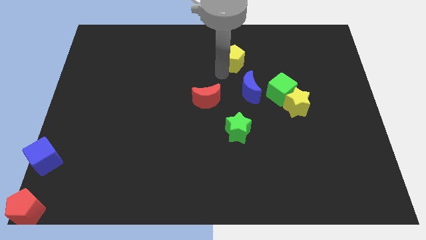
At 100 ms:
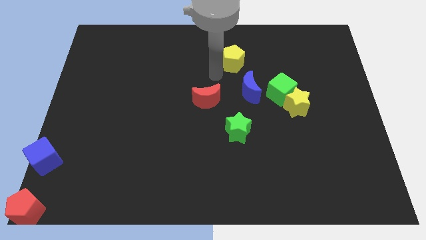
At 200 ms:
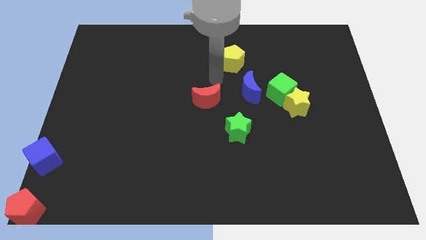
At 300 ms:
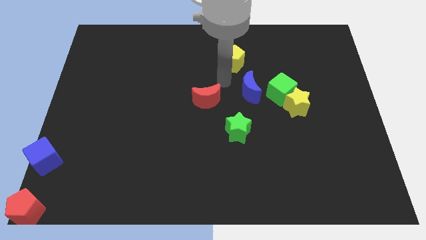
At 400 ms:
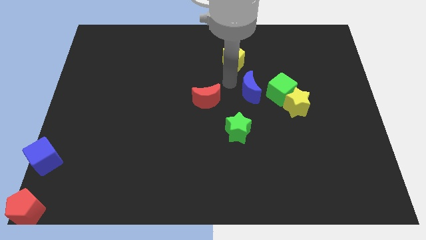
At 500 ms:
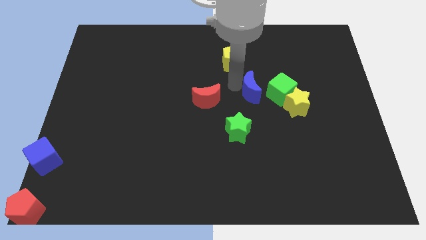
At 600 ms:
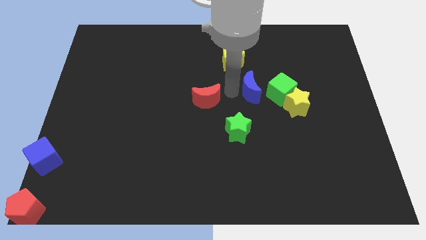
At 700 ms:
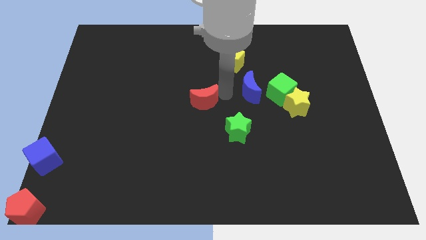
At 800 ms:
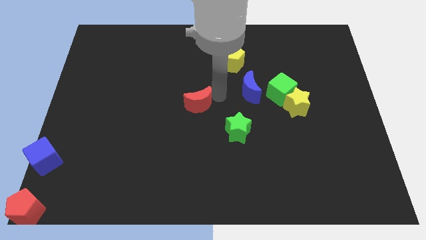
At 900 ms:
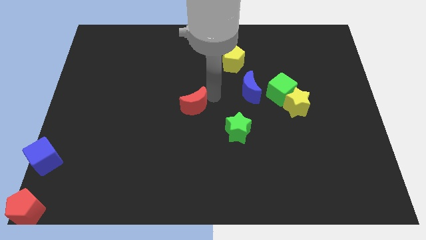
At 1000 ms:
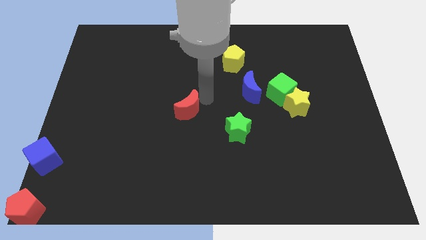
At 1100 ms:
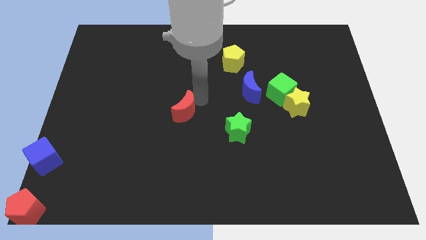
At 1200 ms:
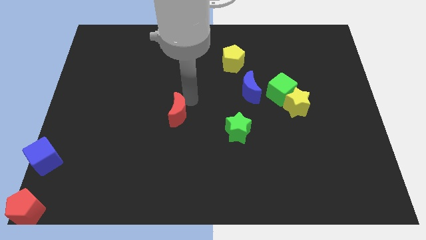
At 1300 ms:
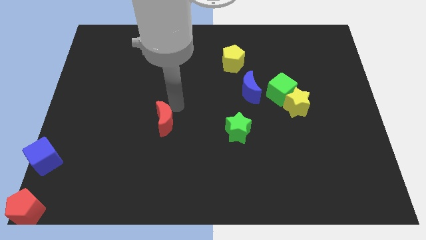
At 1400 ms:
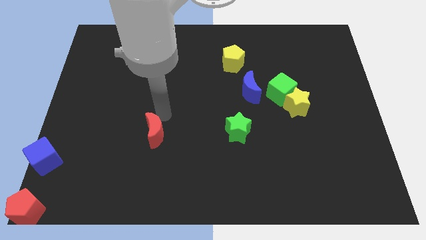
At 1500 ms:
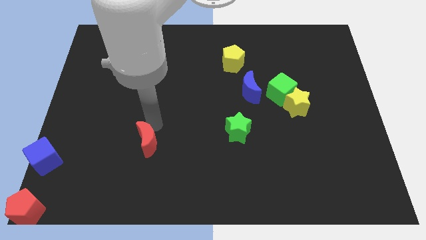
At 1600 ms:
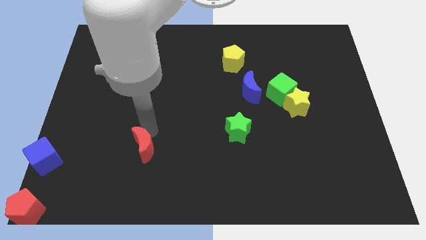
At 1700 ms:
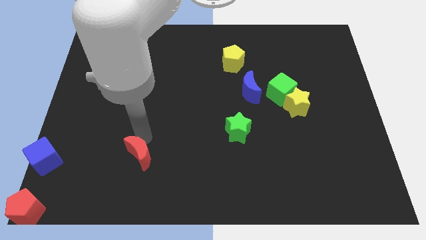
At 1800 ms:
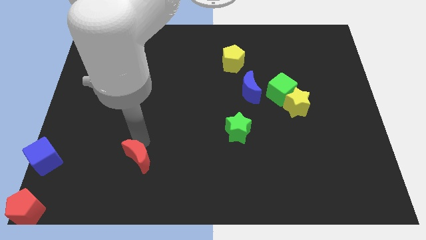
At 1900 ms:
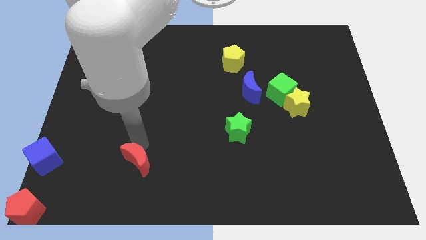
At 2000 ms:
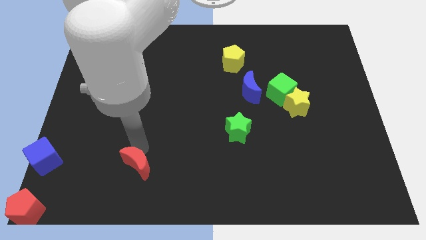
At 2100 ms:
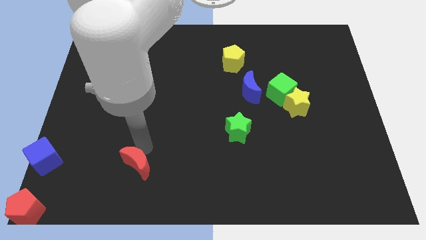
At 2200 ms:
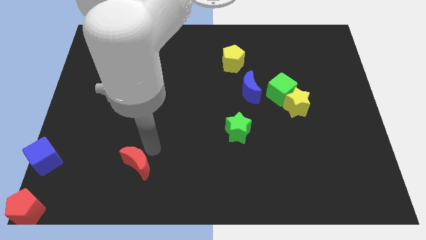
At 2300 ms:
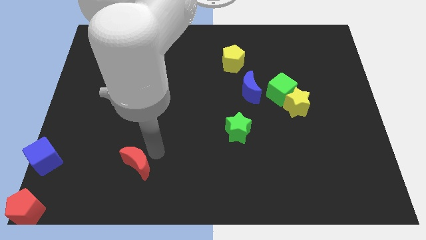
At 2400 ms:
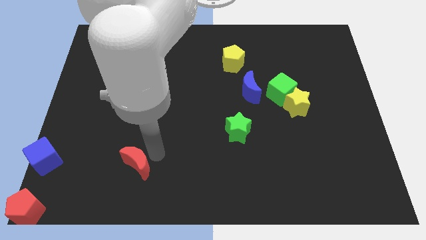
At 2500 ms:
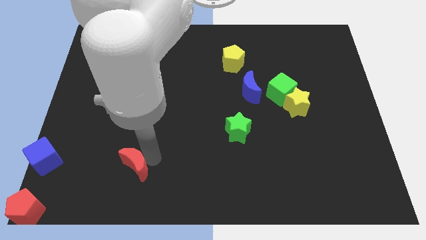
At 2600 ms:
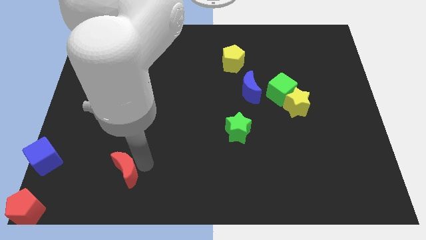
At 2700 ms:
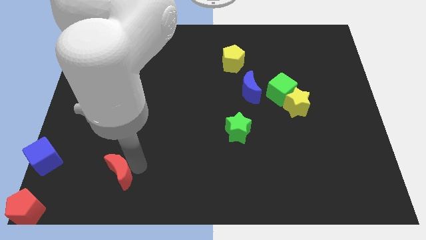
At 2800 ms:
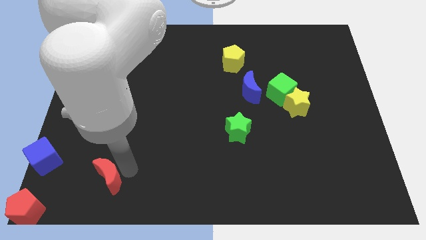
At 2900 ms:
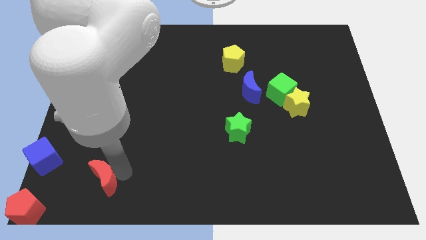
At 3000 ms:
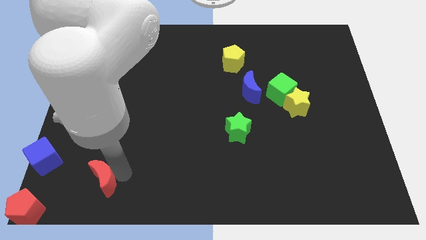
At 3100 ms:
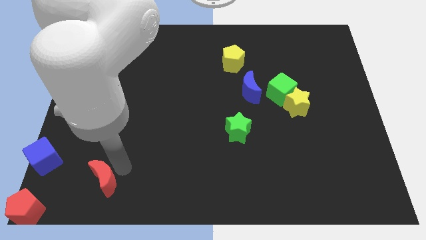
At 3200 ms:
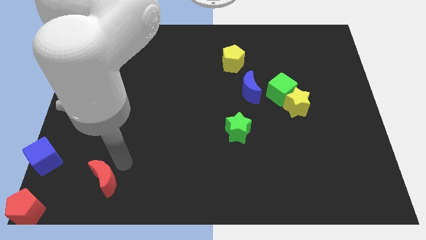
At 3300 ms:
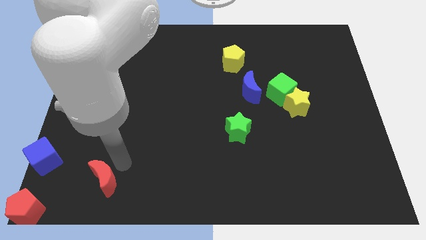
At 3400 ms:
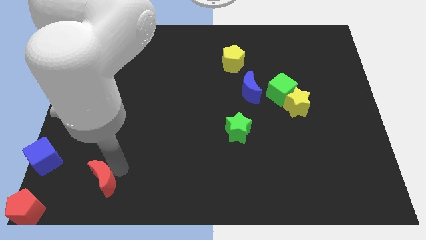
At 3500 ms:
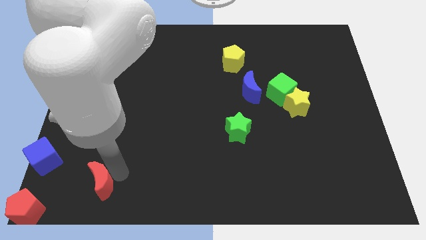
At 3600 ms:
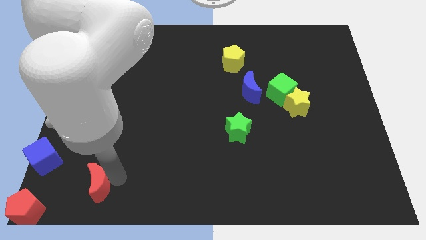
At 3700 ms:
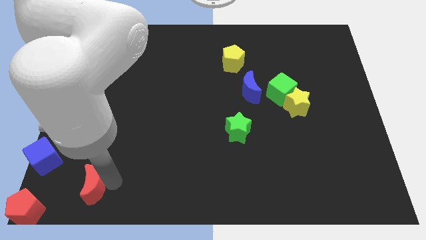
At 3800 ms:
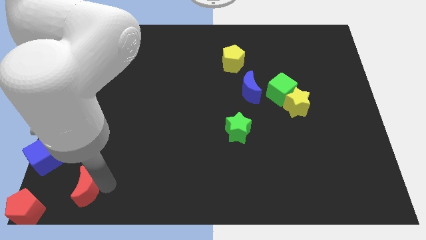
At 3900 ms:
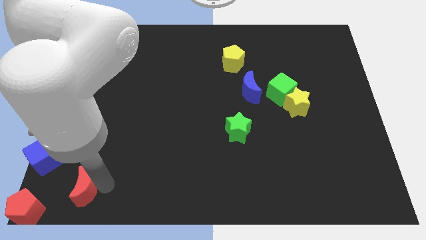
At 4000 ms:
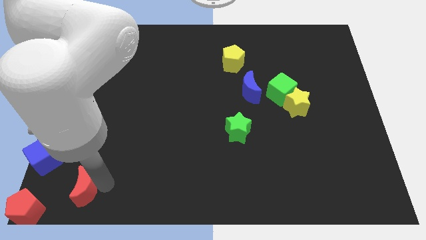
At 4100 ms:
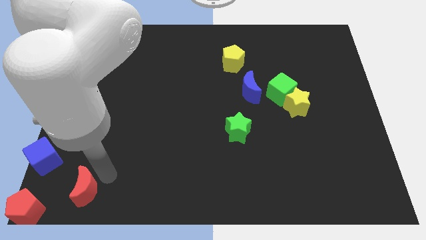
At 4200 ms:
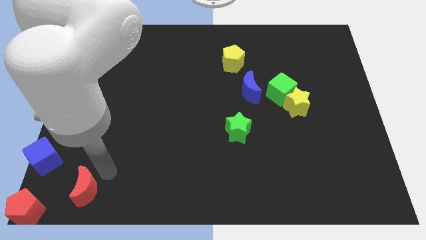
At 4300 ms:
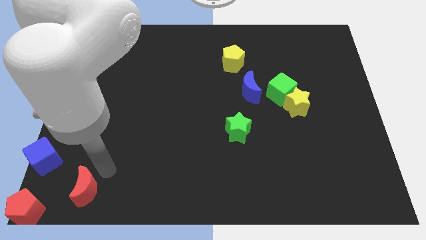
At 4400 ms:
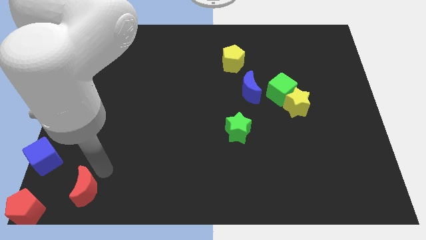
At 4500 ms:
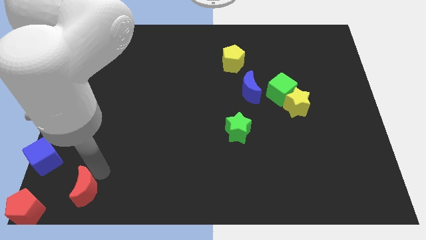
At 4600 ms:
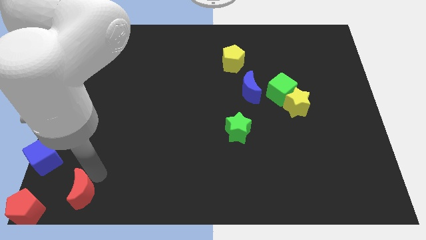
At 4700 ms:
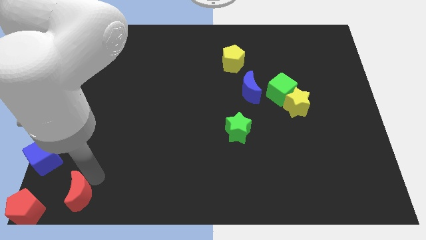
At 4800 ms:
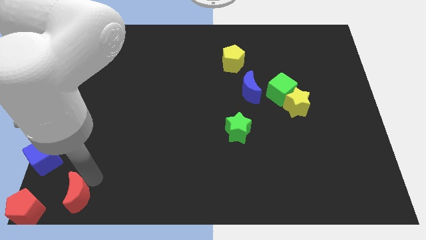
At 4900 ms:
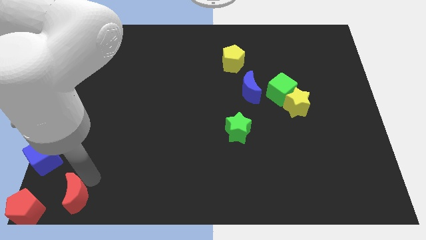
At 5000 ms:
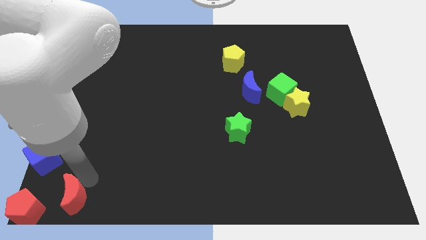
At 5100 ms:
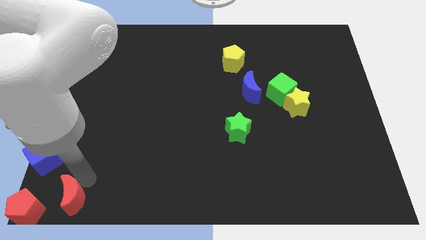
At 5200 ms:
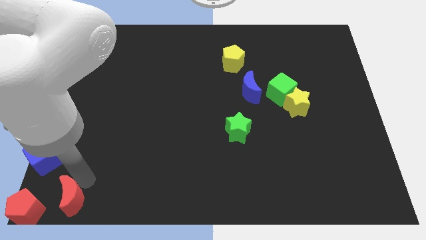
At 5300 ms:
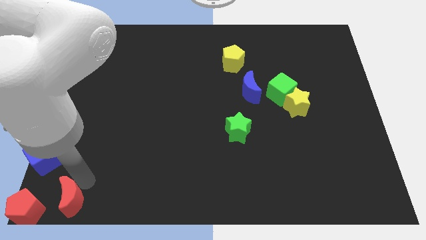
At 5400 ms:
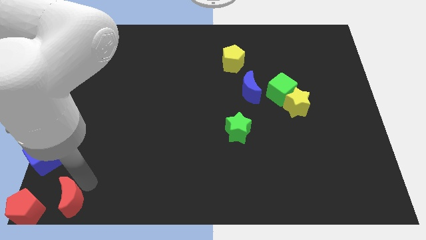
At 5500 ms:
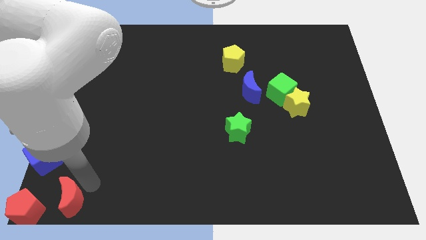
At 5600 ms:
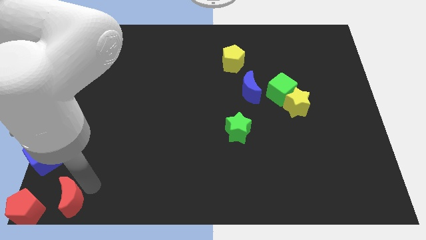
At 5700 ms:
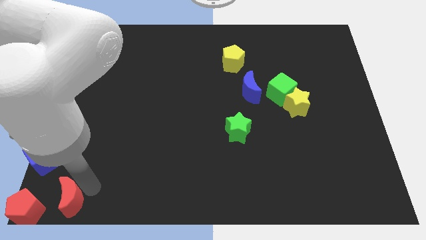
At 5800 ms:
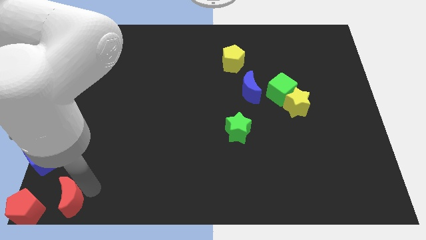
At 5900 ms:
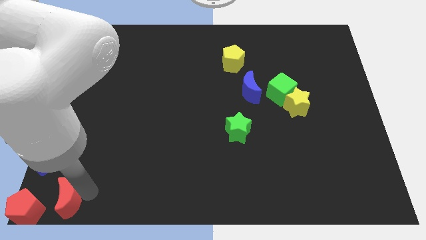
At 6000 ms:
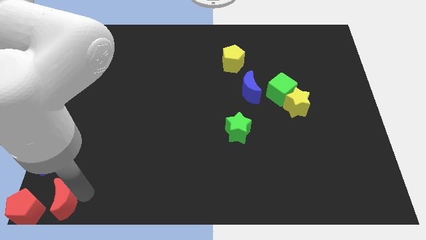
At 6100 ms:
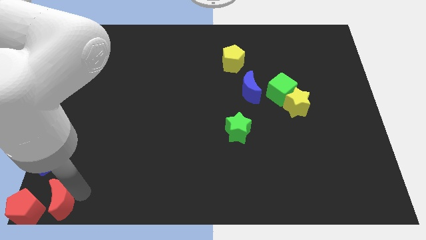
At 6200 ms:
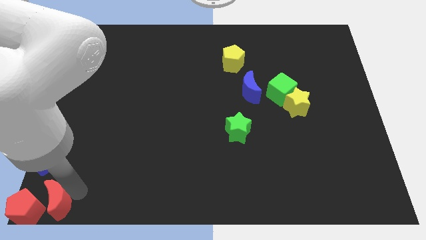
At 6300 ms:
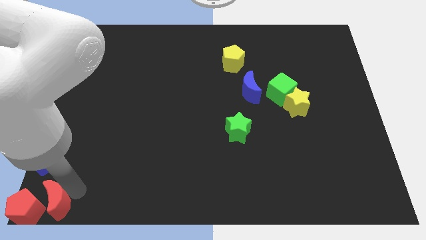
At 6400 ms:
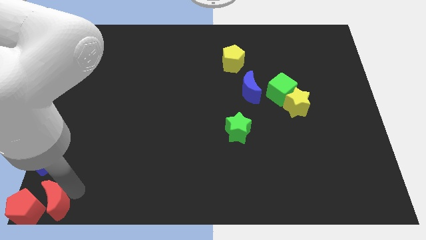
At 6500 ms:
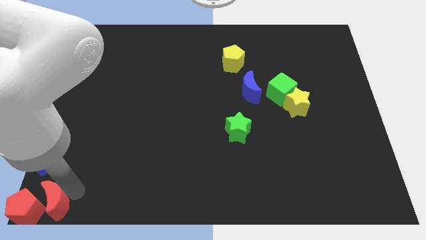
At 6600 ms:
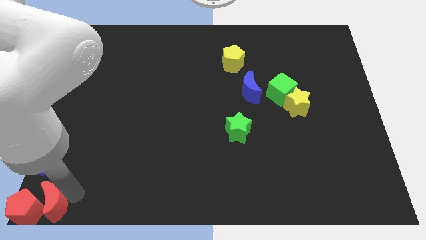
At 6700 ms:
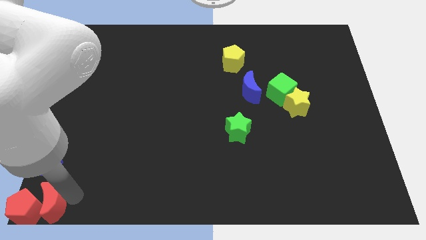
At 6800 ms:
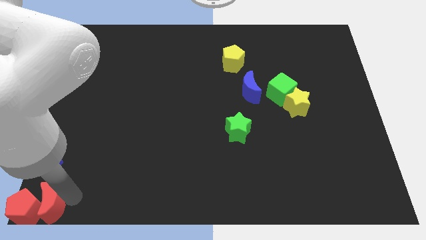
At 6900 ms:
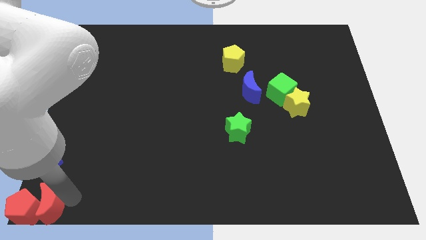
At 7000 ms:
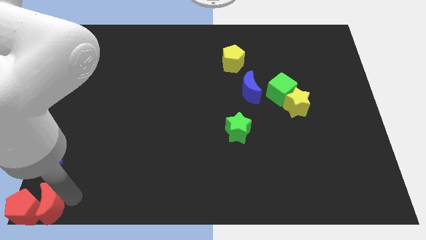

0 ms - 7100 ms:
push the red crescent to the right of the red pentagon

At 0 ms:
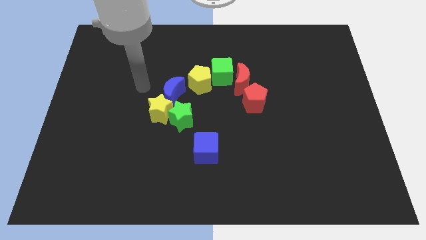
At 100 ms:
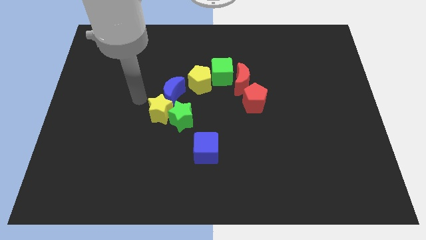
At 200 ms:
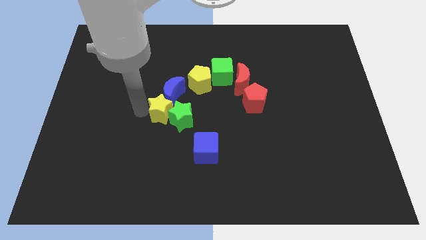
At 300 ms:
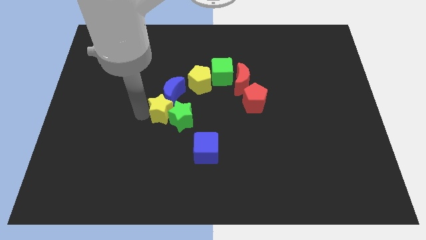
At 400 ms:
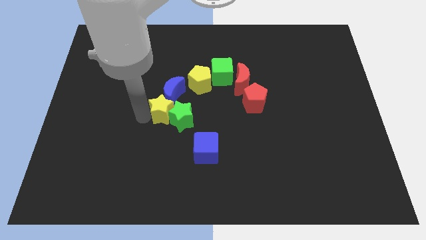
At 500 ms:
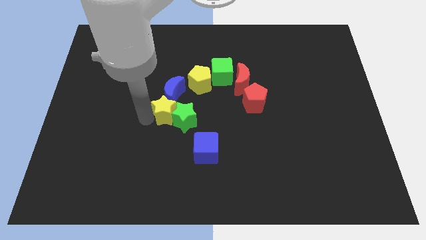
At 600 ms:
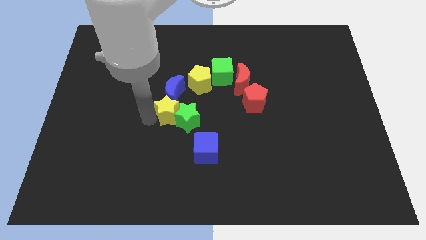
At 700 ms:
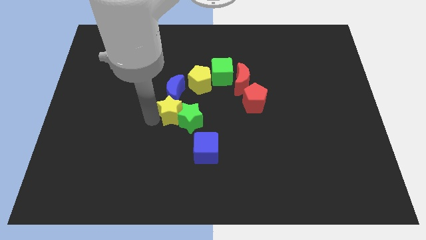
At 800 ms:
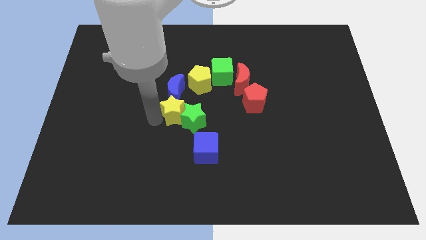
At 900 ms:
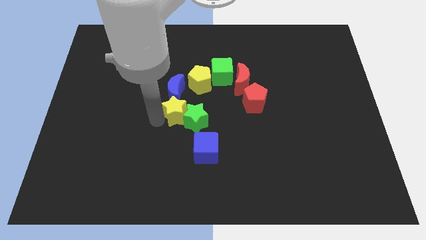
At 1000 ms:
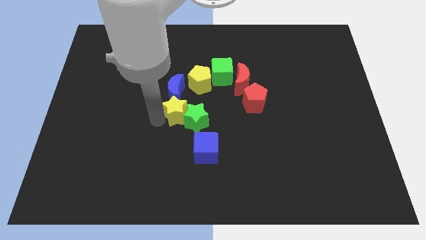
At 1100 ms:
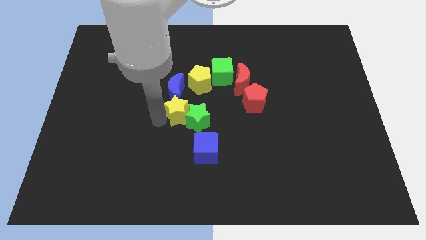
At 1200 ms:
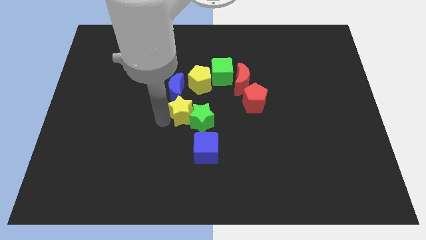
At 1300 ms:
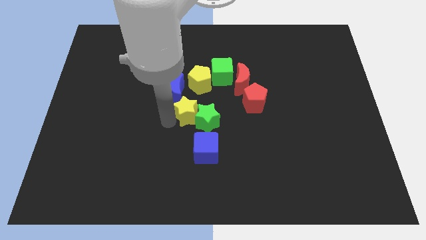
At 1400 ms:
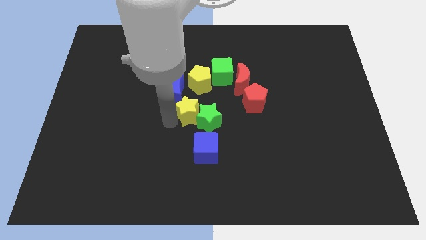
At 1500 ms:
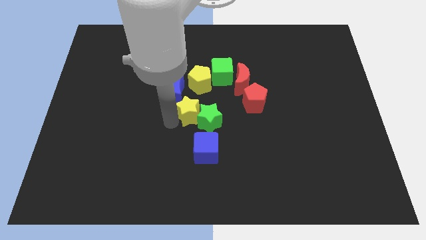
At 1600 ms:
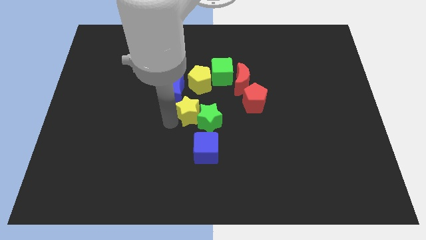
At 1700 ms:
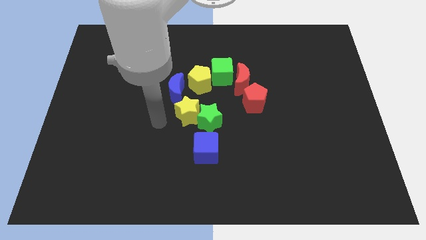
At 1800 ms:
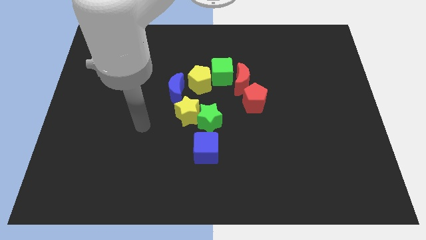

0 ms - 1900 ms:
push the group of stars to the right
